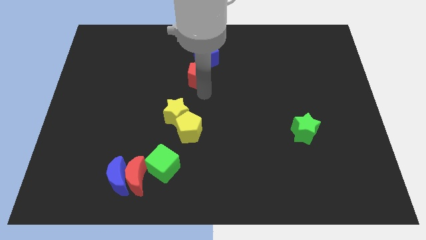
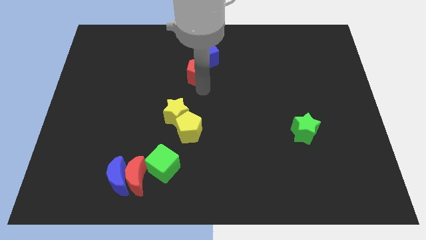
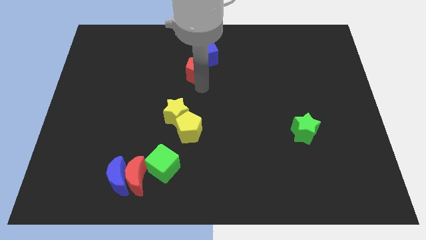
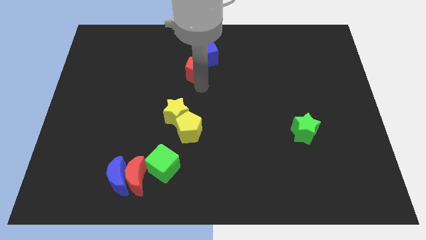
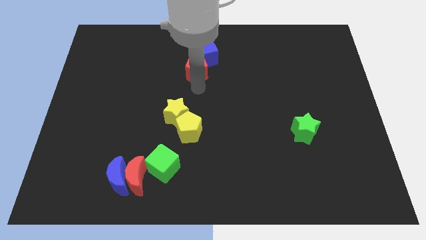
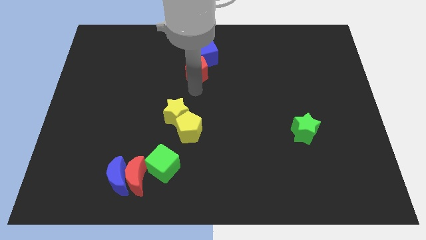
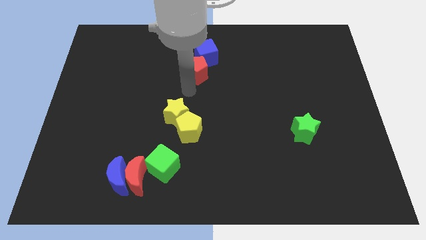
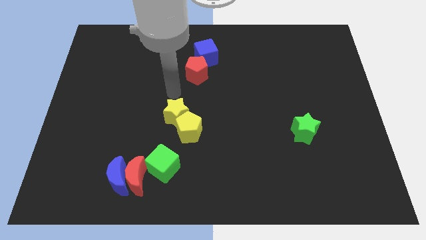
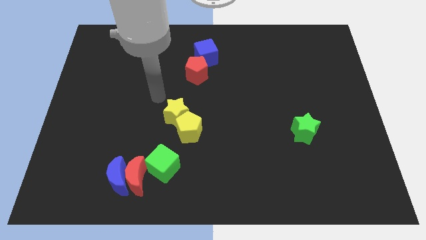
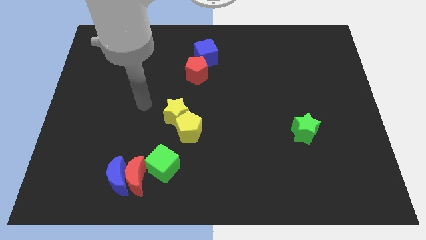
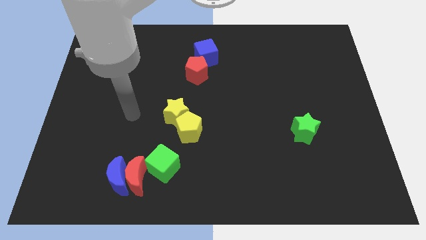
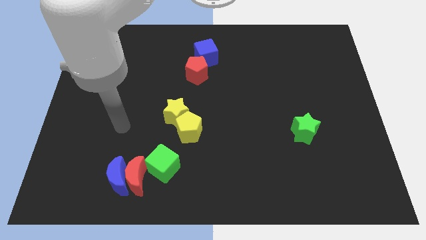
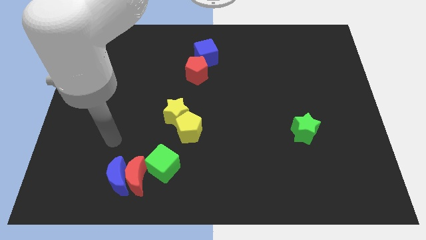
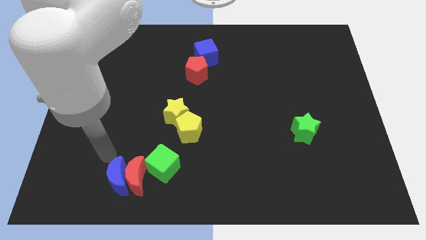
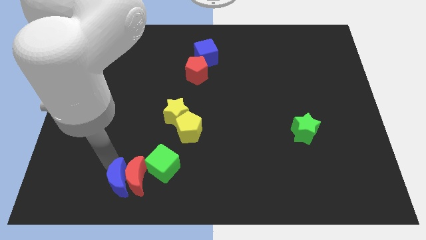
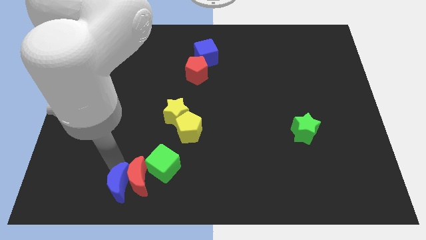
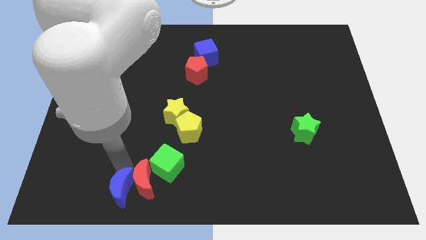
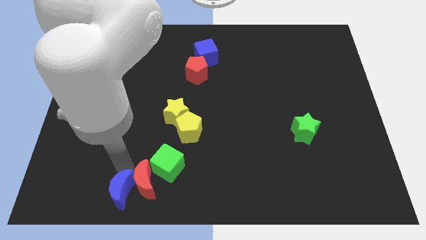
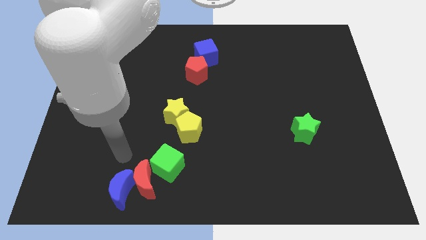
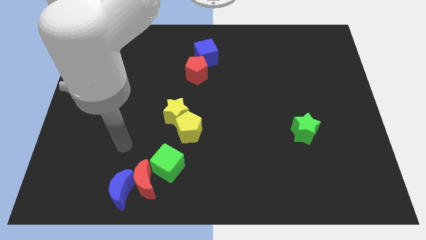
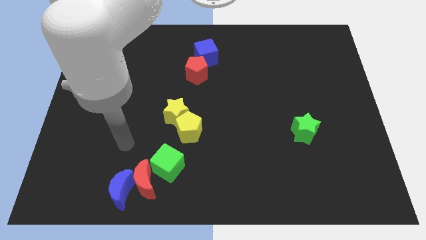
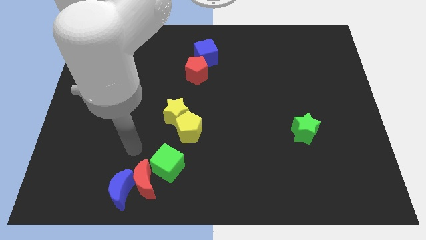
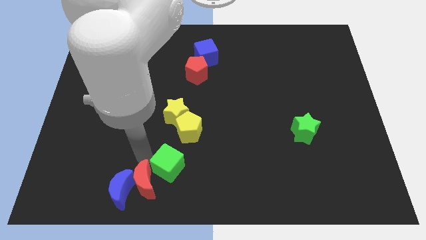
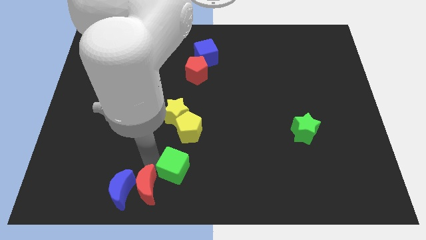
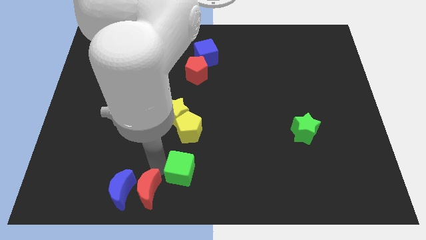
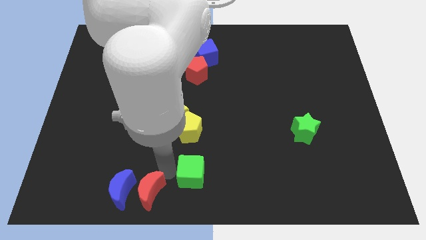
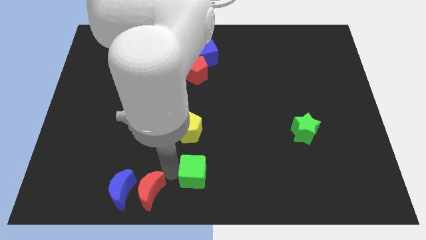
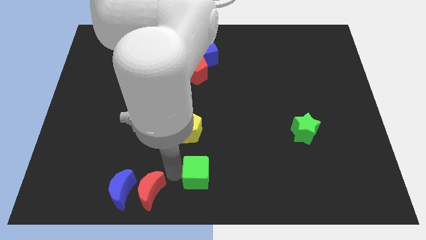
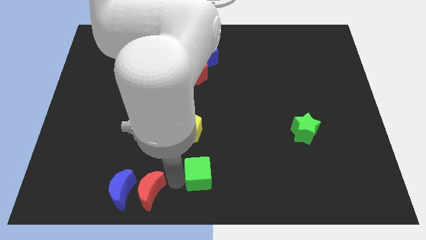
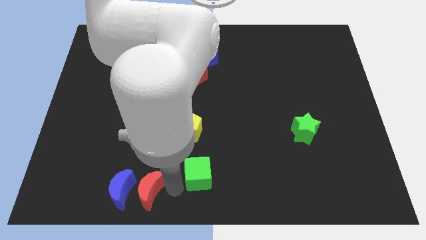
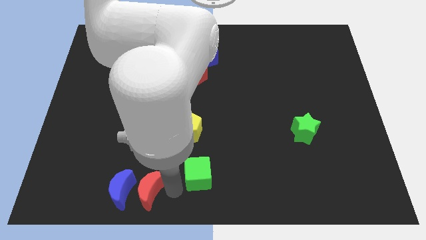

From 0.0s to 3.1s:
push the moons towards the green star

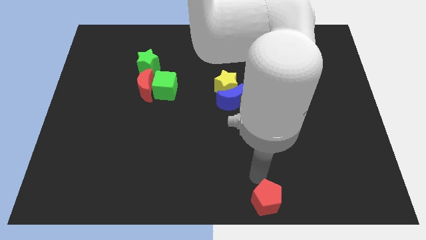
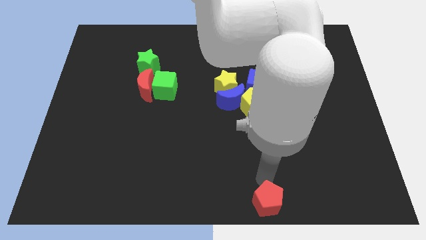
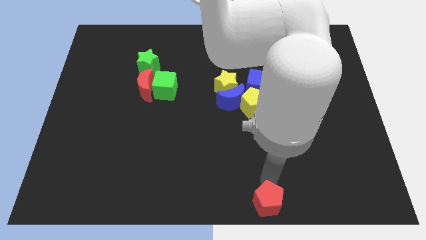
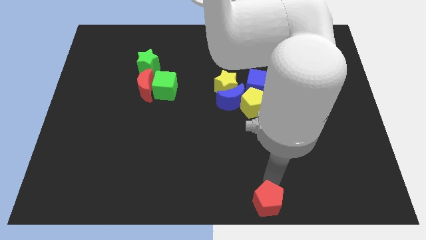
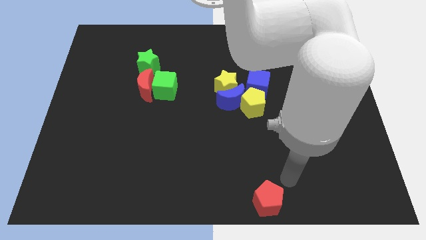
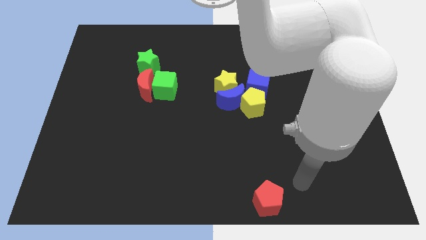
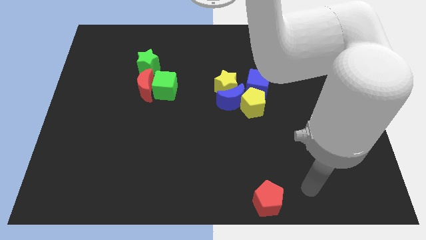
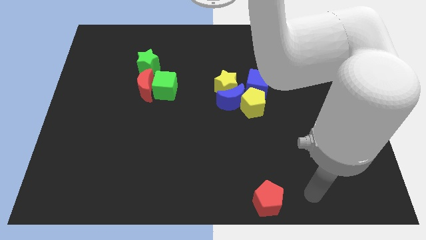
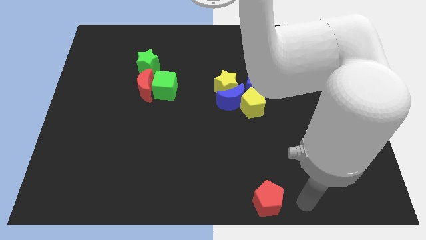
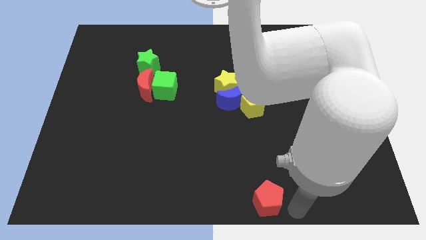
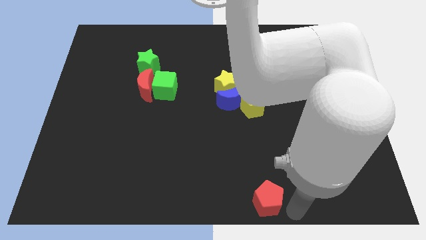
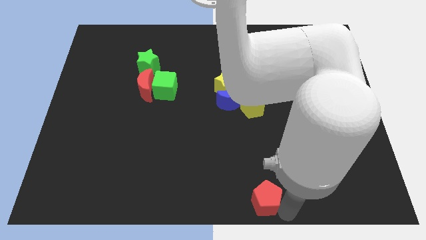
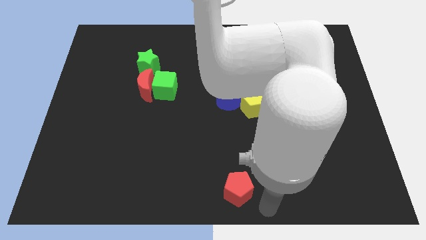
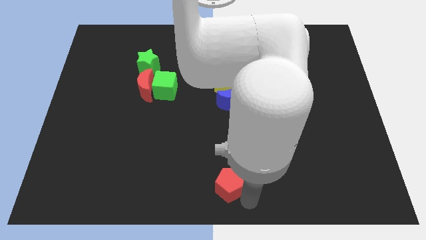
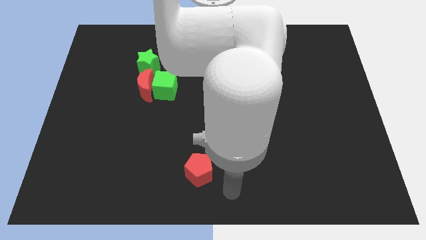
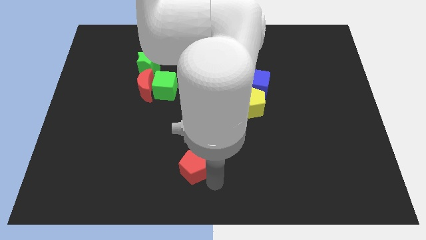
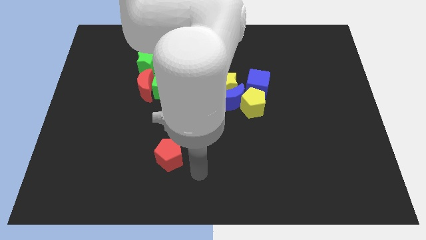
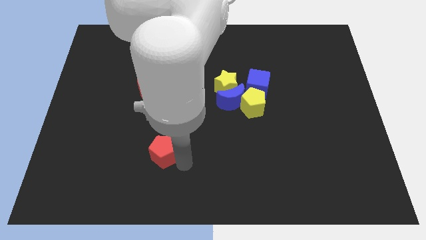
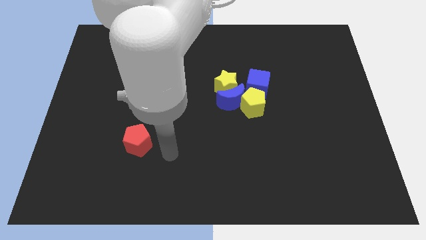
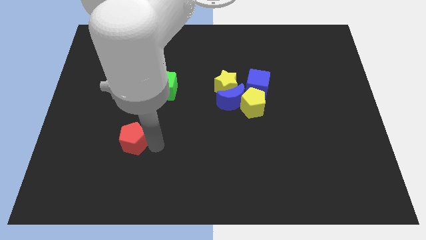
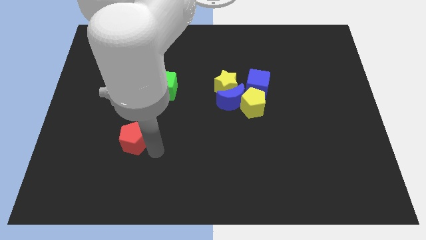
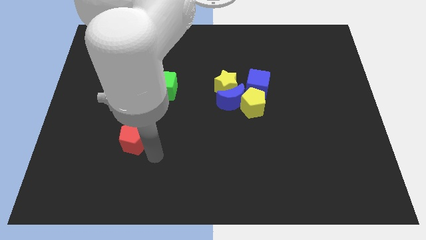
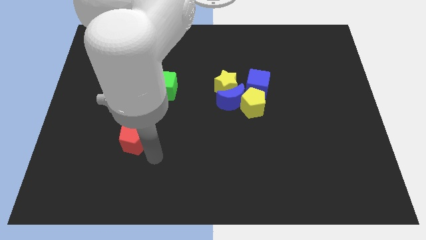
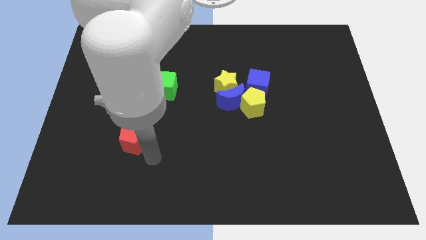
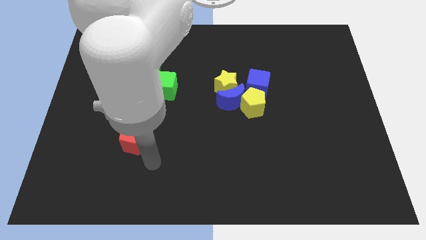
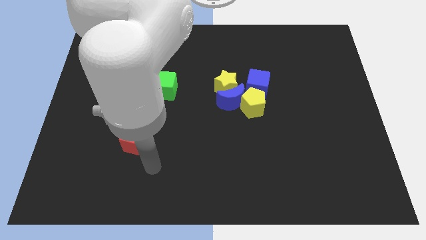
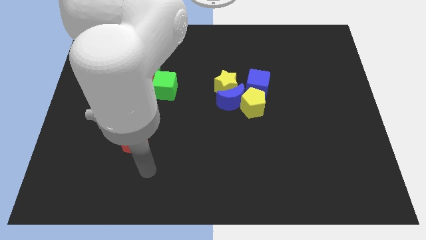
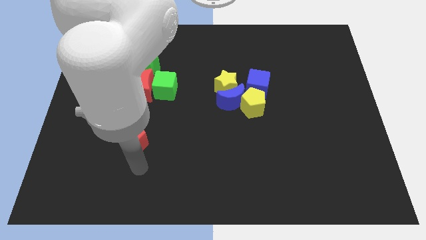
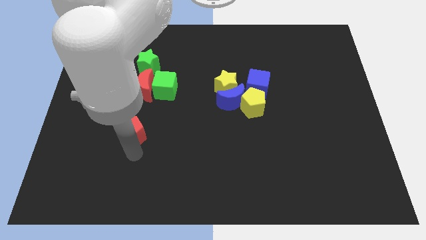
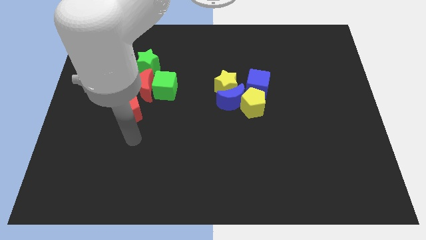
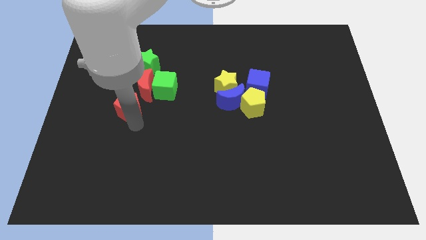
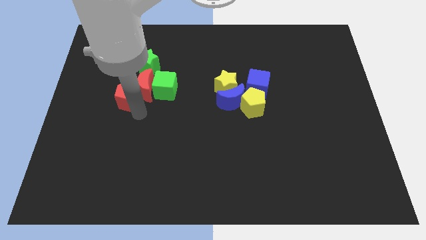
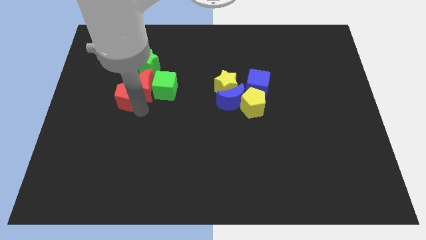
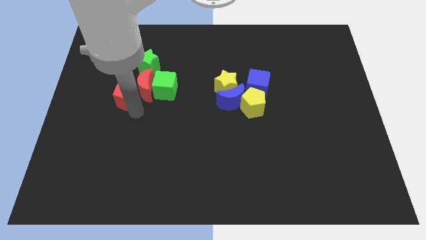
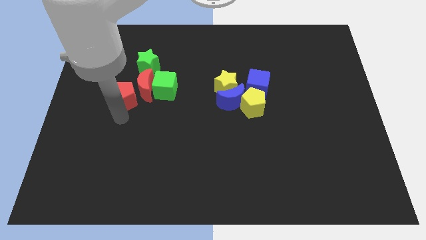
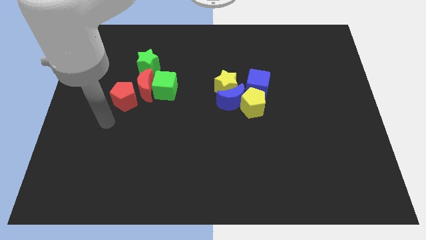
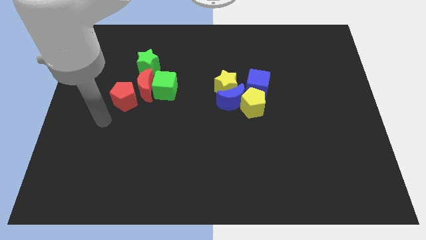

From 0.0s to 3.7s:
push the red pentagon to the left of the red crescent

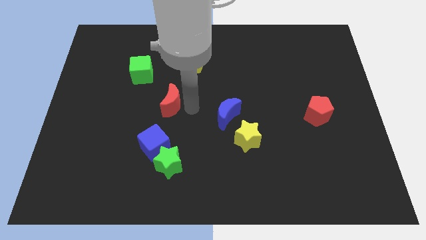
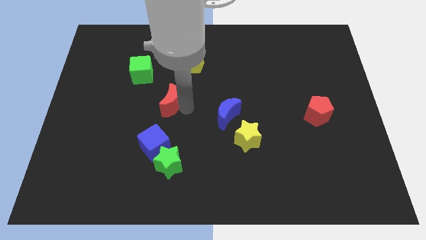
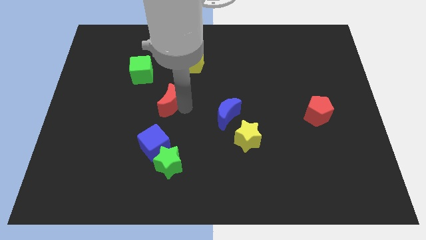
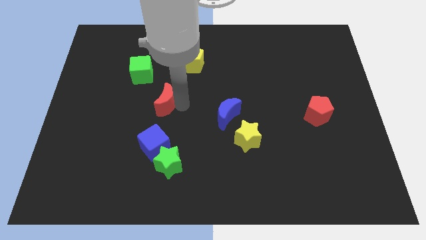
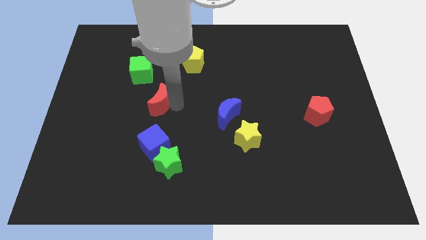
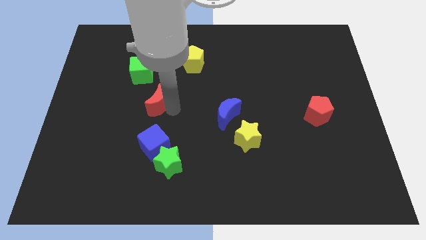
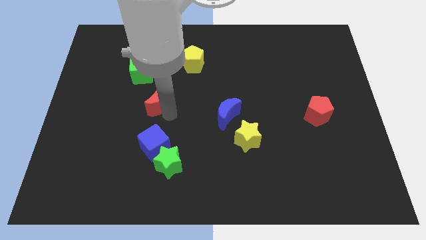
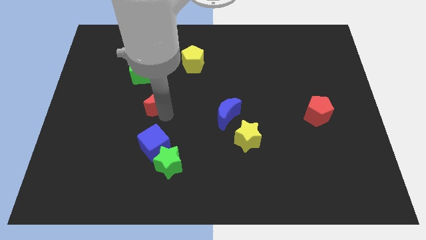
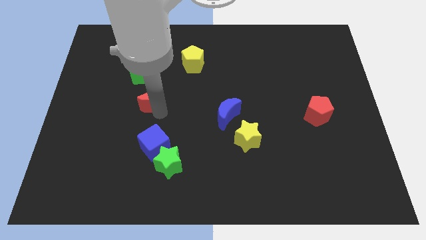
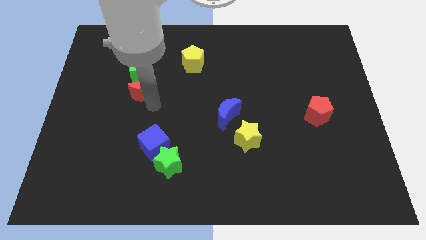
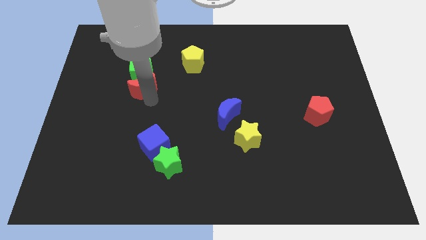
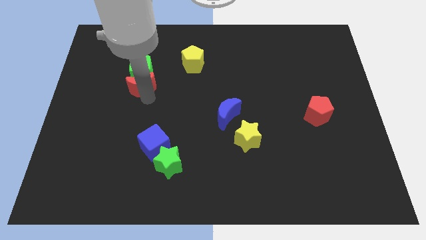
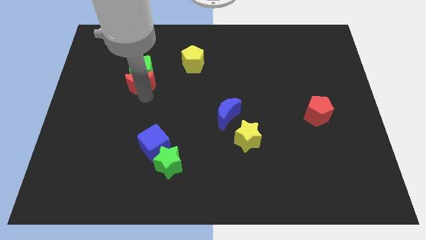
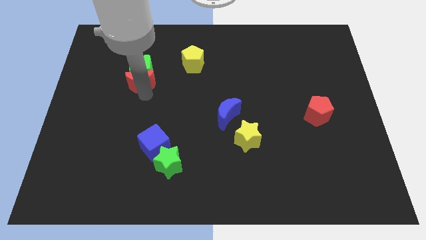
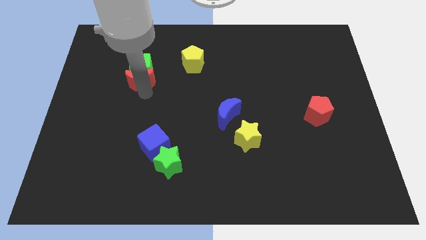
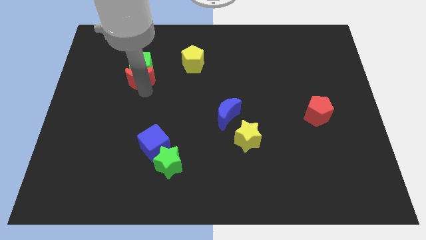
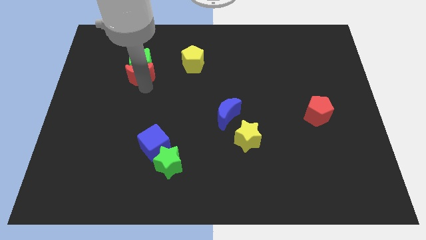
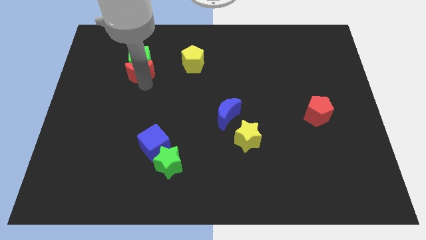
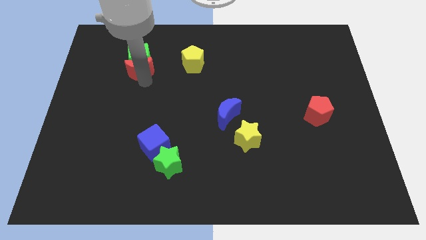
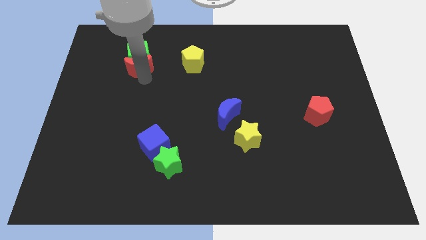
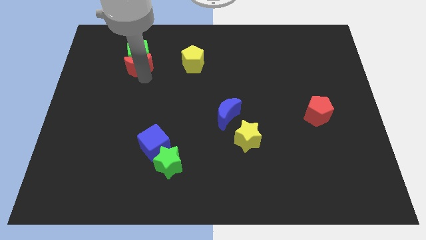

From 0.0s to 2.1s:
move red moon close to the green cube
